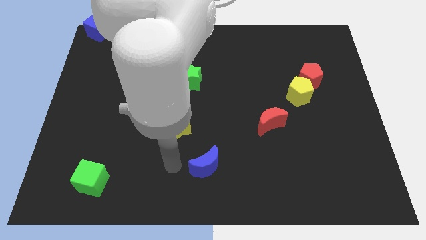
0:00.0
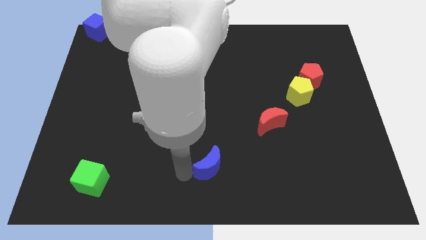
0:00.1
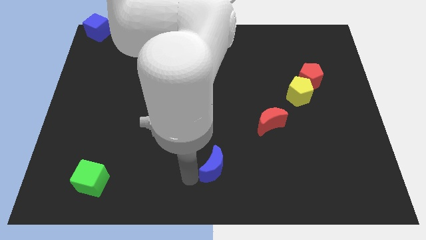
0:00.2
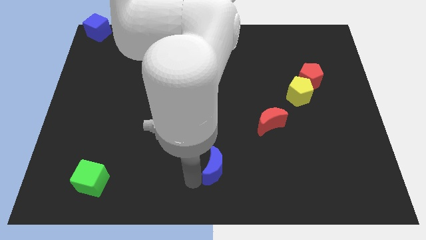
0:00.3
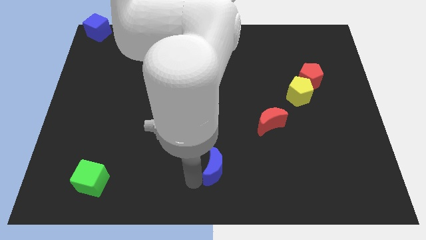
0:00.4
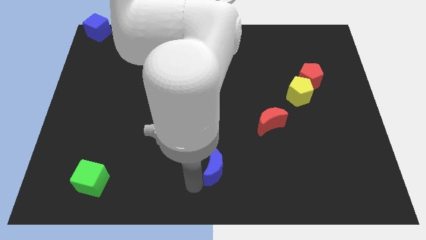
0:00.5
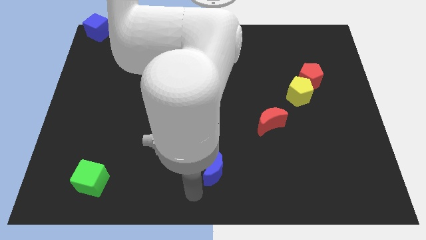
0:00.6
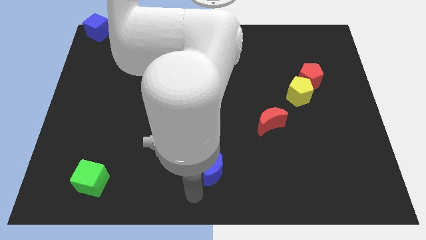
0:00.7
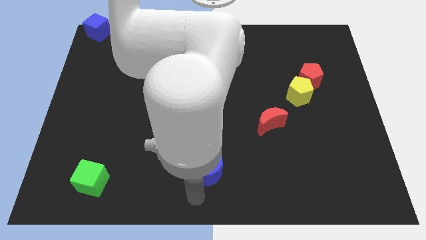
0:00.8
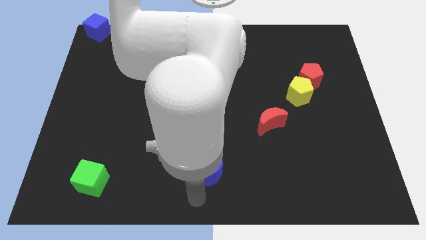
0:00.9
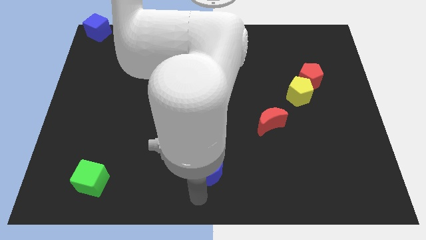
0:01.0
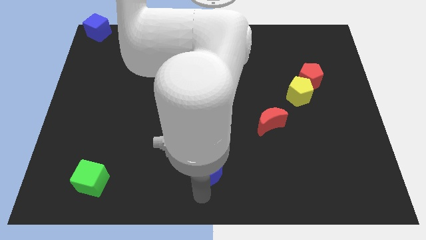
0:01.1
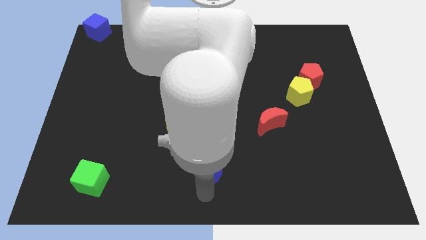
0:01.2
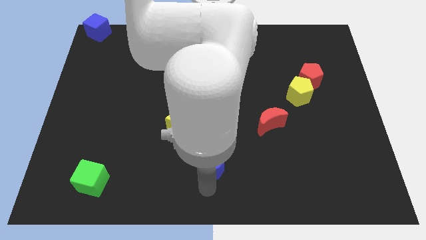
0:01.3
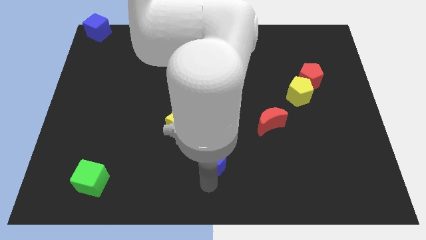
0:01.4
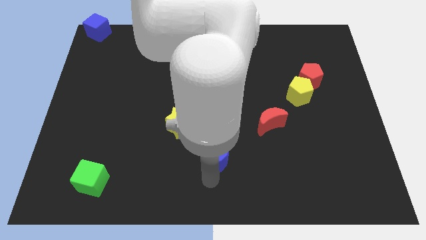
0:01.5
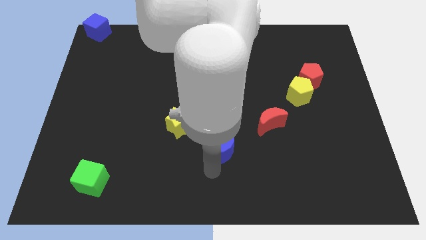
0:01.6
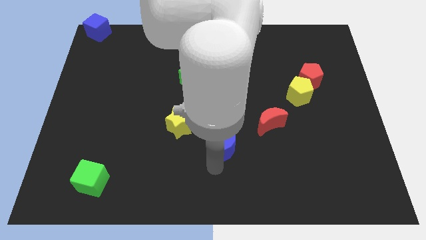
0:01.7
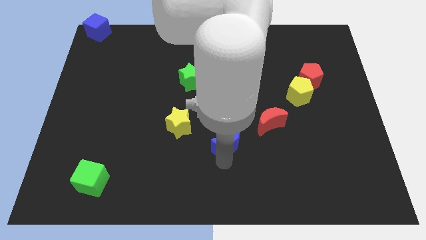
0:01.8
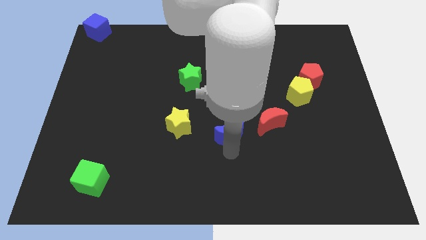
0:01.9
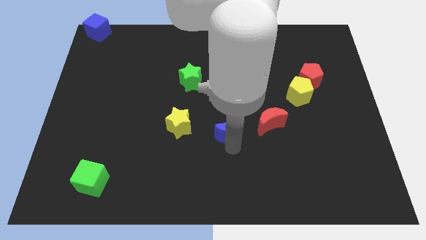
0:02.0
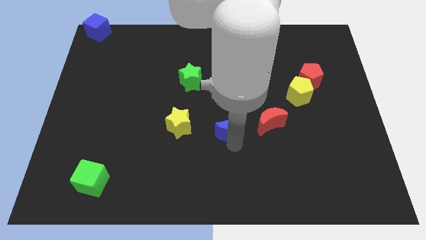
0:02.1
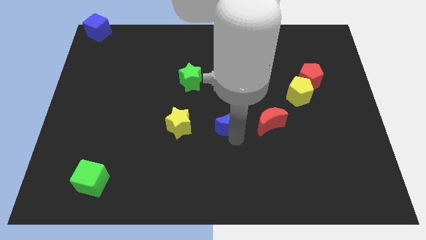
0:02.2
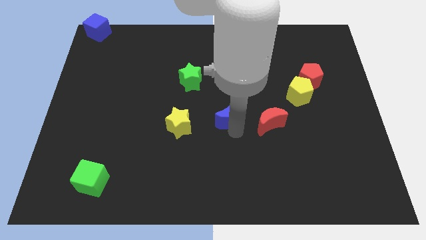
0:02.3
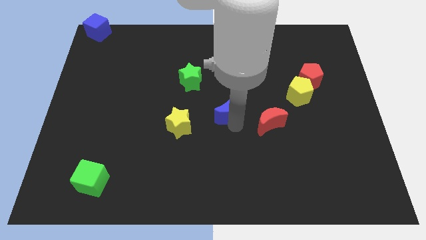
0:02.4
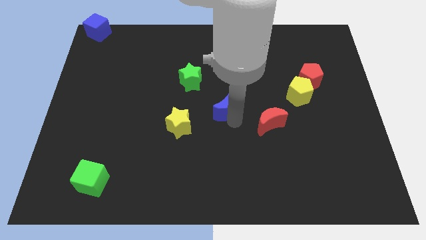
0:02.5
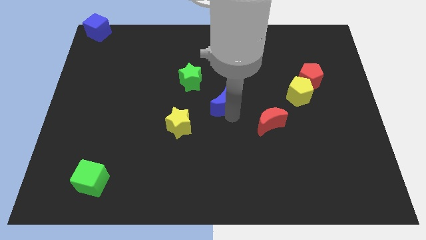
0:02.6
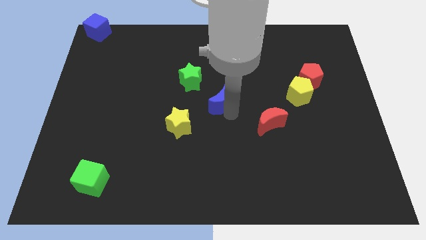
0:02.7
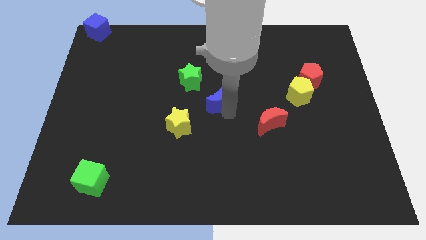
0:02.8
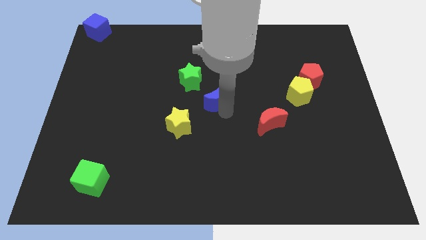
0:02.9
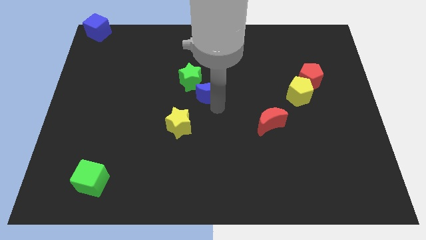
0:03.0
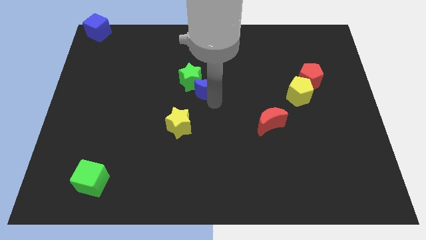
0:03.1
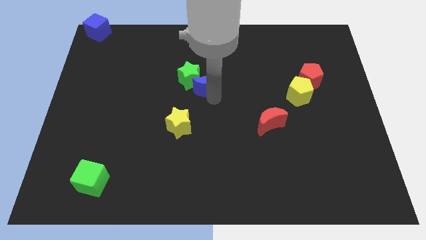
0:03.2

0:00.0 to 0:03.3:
slide the blue moon to the bottom right side of the green star

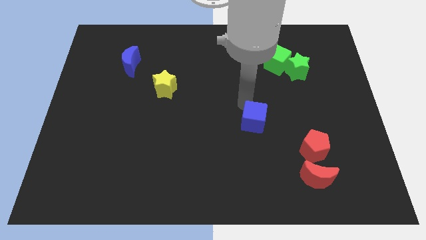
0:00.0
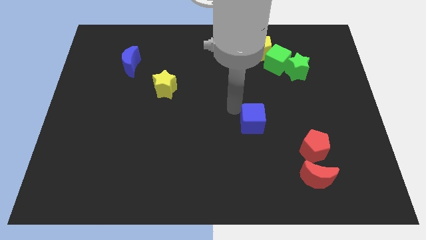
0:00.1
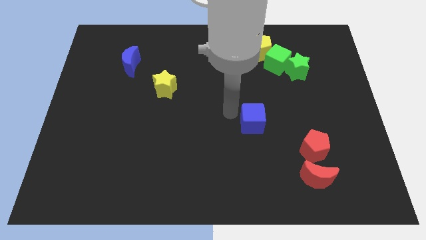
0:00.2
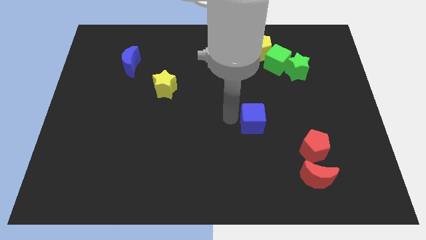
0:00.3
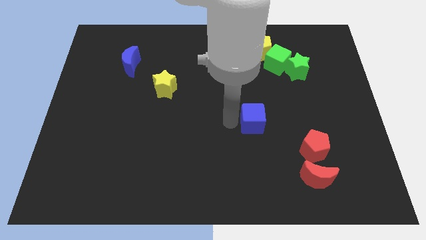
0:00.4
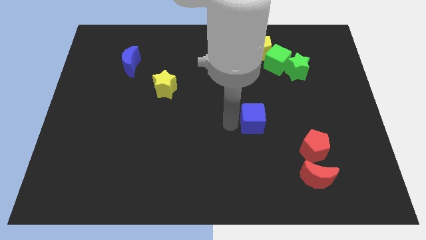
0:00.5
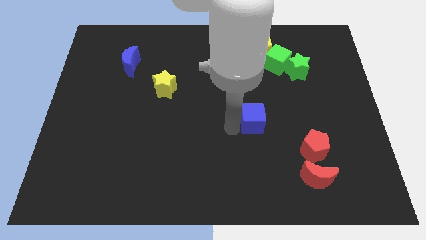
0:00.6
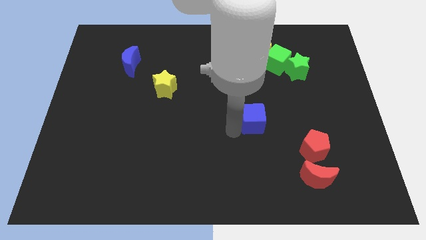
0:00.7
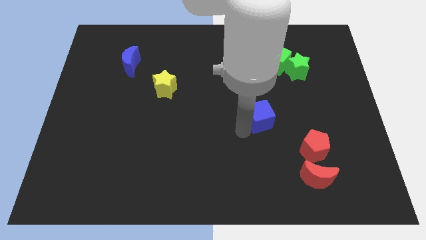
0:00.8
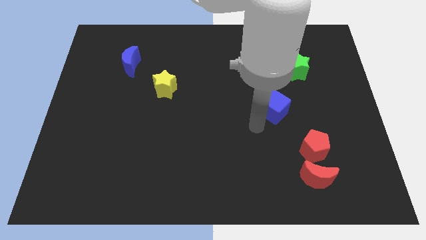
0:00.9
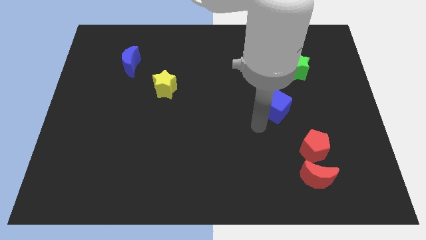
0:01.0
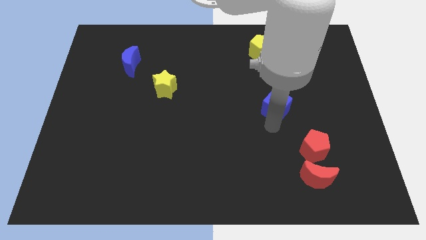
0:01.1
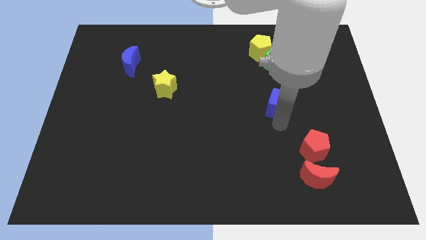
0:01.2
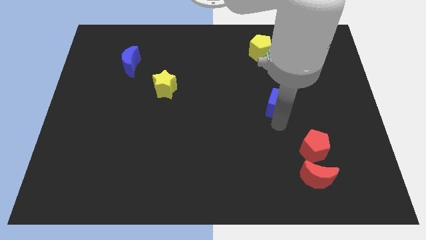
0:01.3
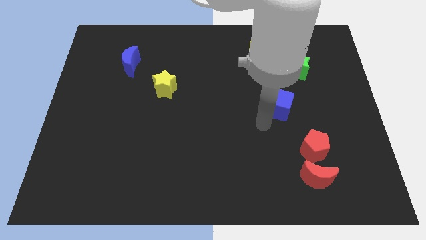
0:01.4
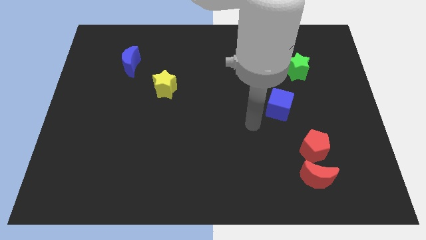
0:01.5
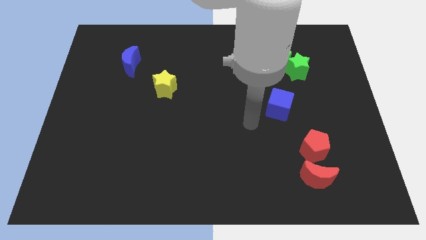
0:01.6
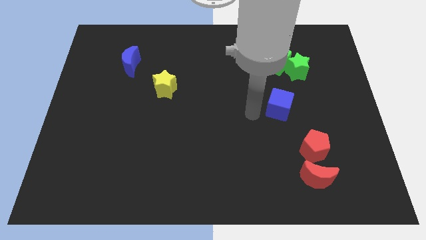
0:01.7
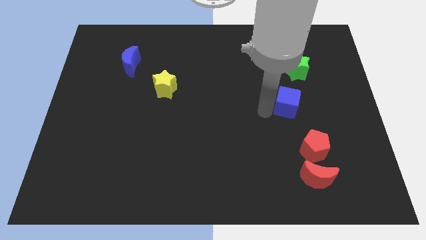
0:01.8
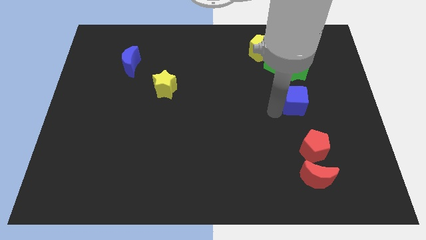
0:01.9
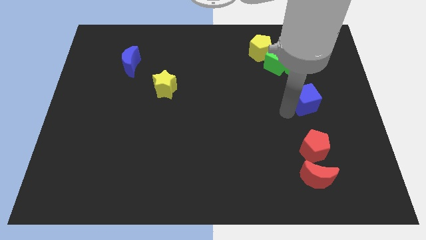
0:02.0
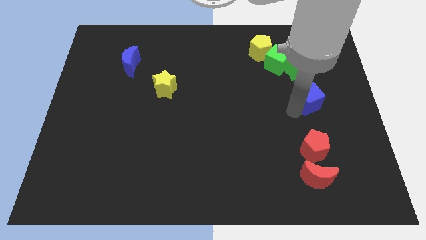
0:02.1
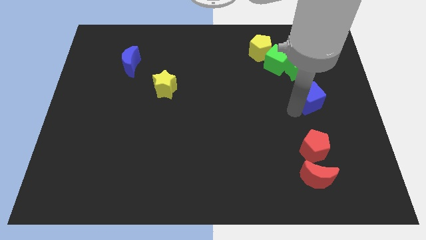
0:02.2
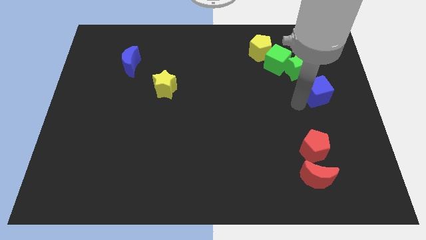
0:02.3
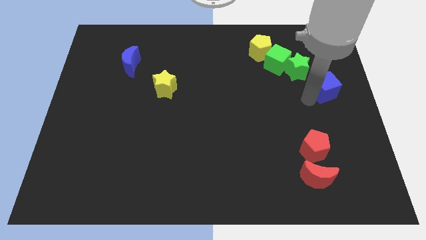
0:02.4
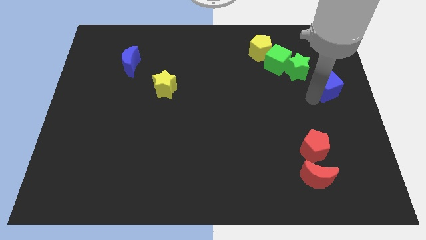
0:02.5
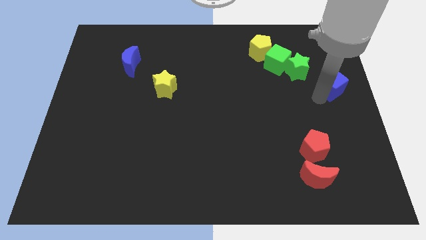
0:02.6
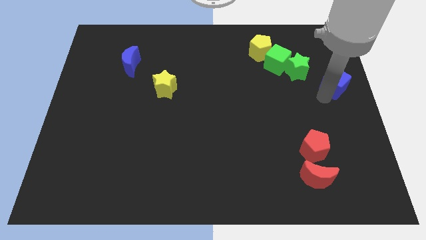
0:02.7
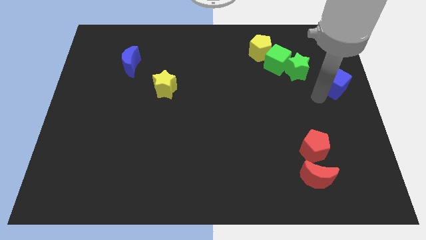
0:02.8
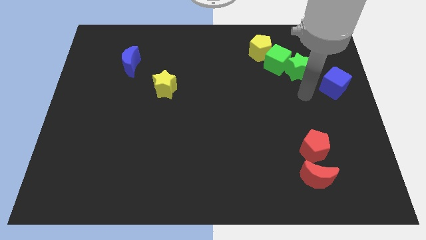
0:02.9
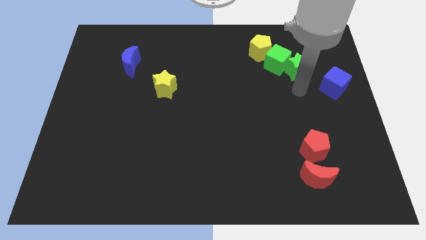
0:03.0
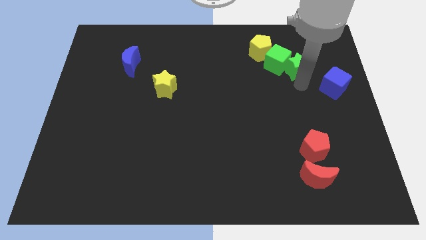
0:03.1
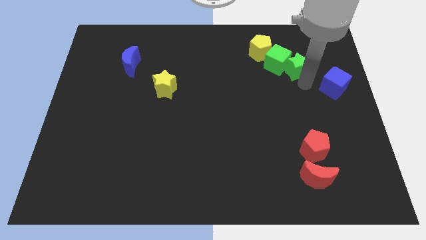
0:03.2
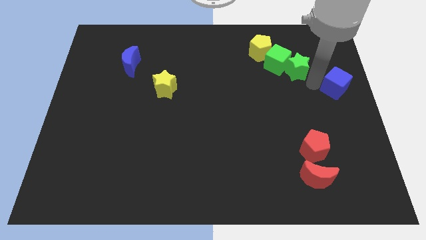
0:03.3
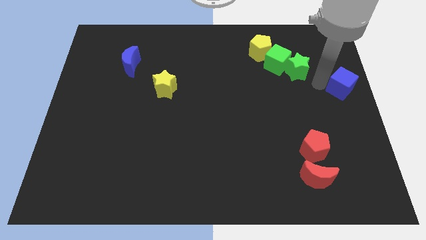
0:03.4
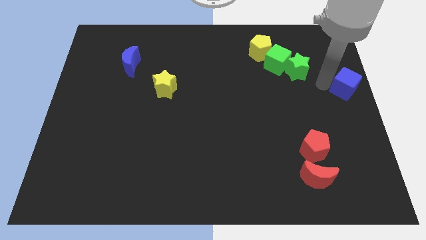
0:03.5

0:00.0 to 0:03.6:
move the blue cube towards the center right of the board

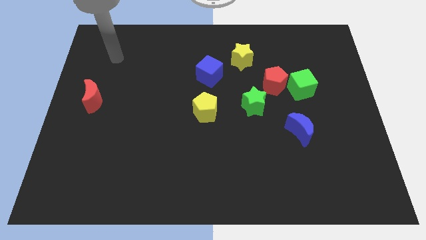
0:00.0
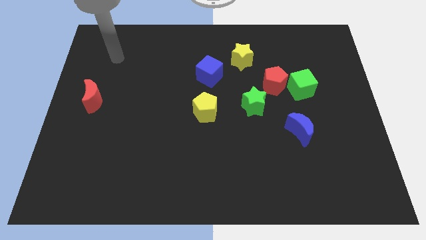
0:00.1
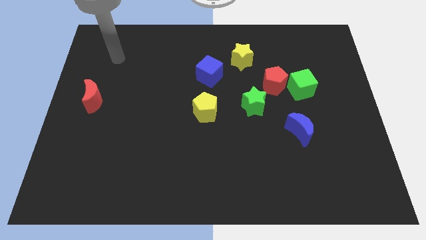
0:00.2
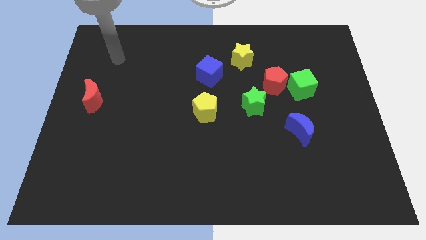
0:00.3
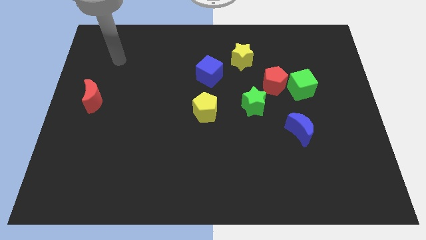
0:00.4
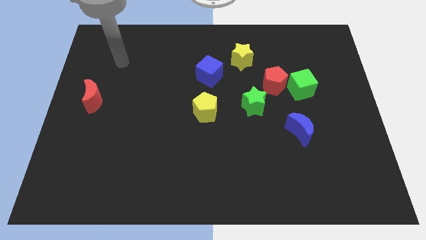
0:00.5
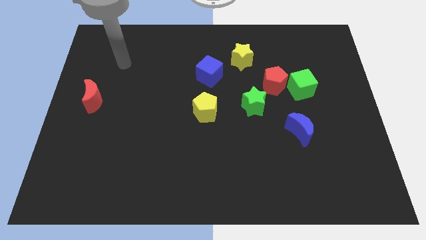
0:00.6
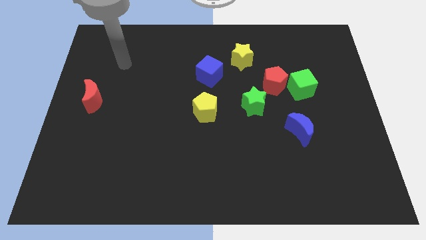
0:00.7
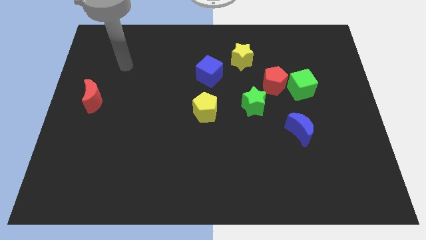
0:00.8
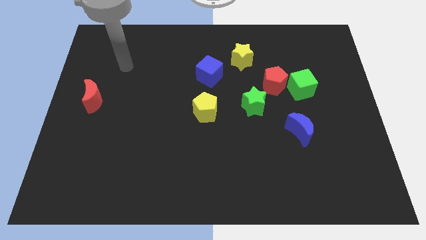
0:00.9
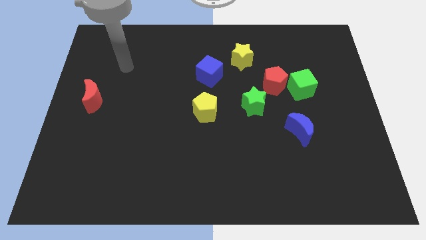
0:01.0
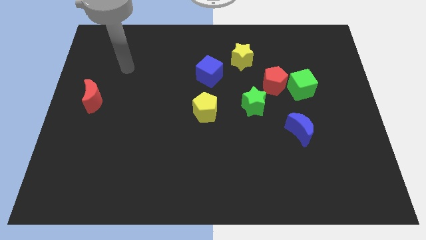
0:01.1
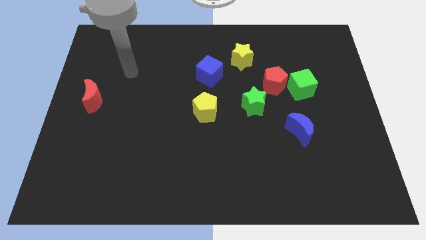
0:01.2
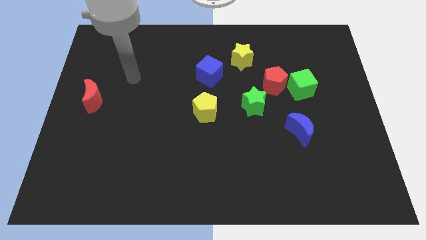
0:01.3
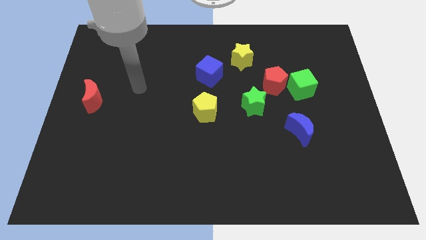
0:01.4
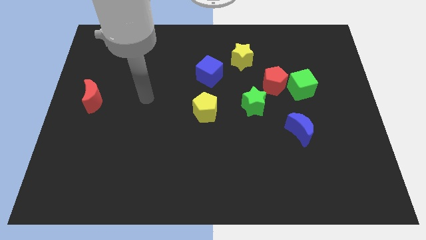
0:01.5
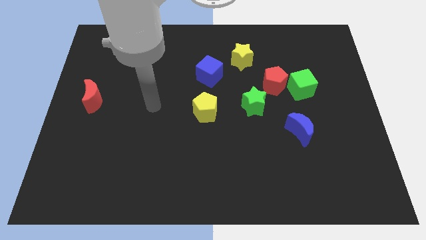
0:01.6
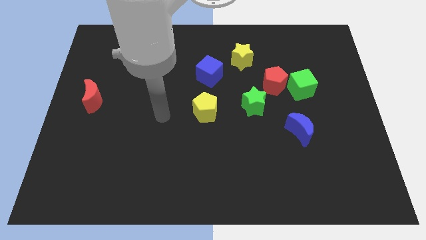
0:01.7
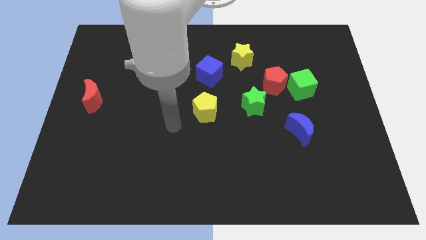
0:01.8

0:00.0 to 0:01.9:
point your arm towards the yellow pentagon

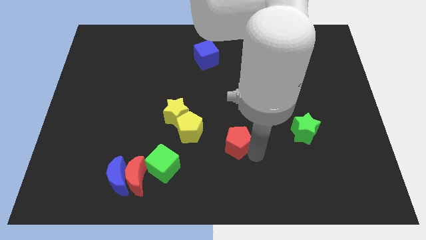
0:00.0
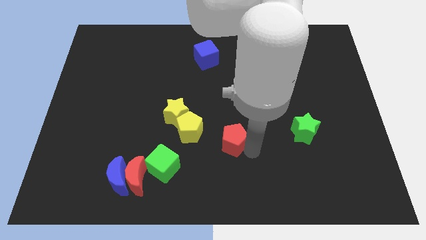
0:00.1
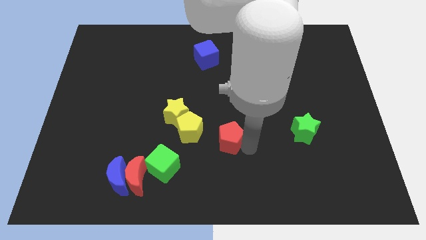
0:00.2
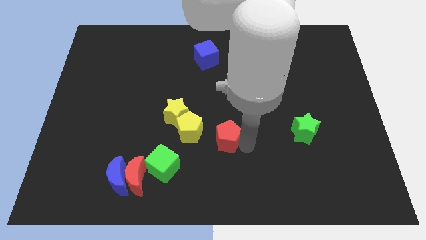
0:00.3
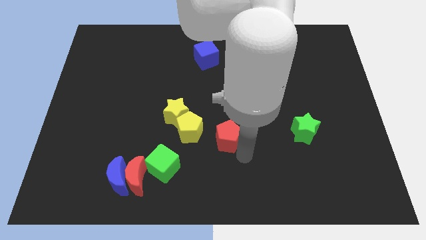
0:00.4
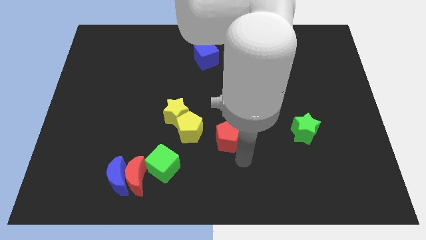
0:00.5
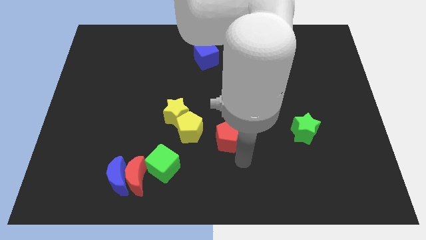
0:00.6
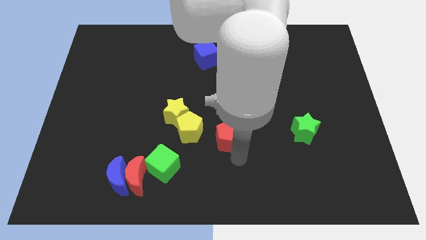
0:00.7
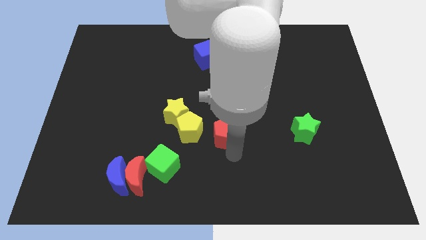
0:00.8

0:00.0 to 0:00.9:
push the red pentagon slightly to the center
